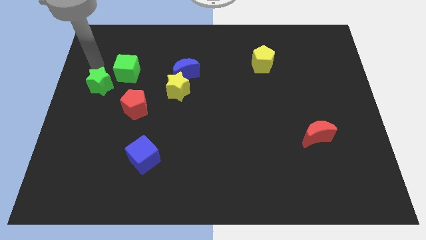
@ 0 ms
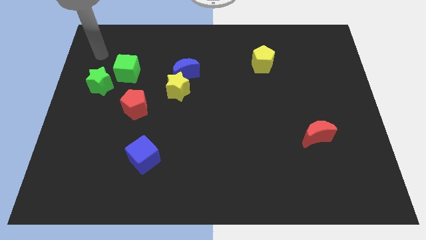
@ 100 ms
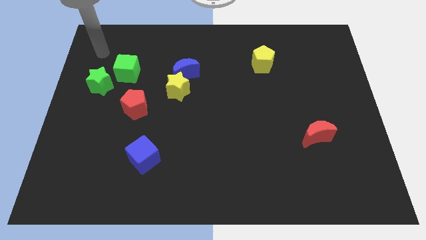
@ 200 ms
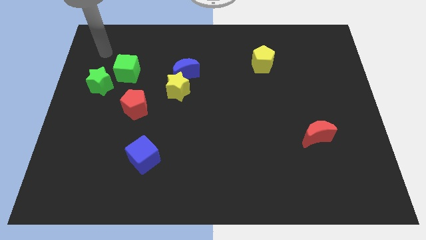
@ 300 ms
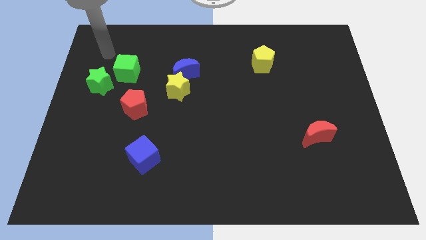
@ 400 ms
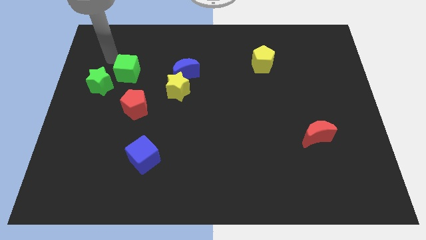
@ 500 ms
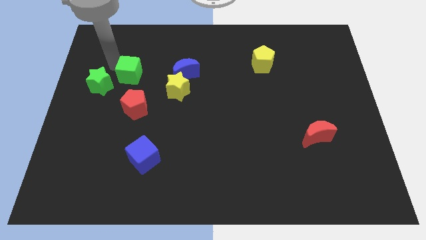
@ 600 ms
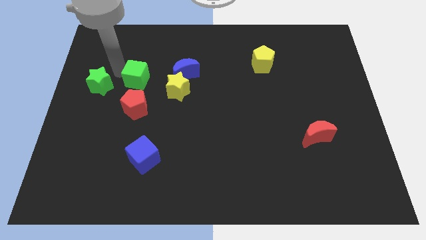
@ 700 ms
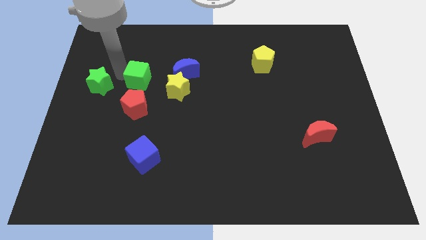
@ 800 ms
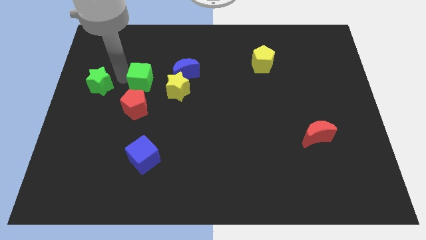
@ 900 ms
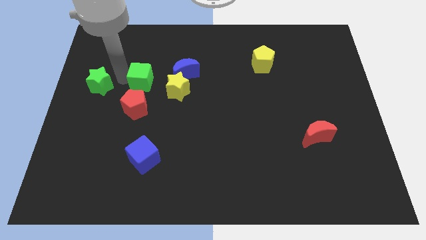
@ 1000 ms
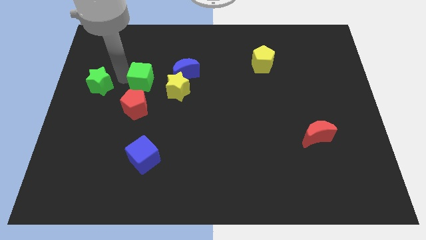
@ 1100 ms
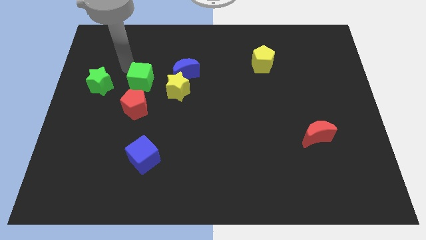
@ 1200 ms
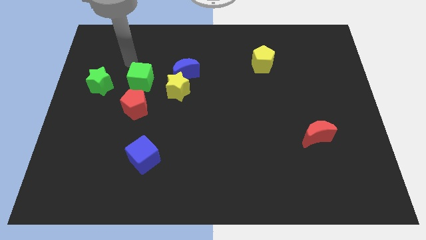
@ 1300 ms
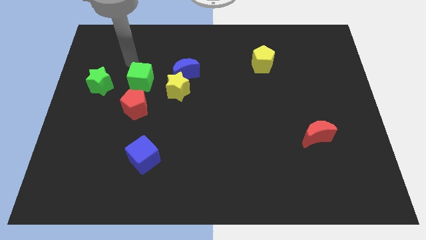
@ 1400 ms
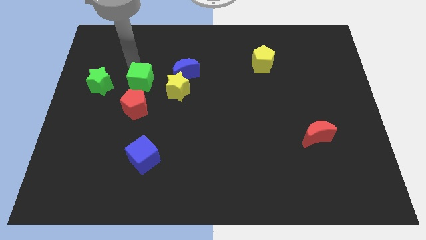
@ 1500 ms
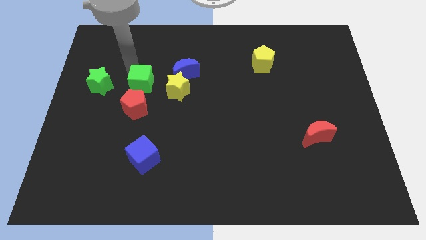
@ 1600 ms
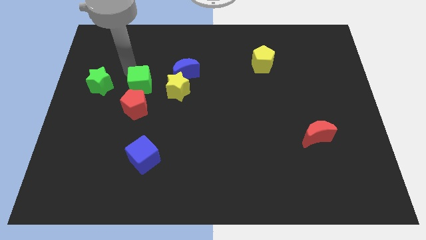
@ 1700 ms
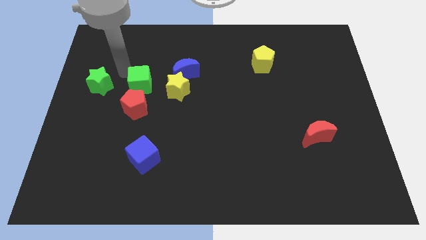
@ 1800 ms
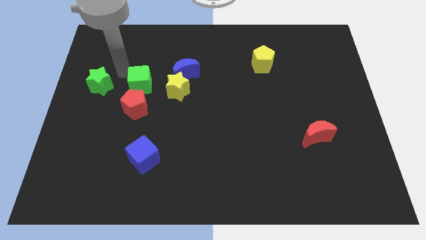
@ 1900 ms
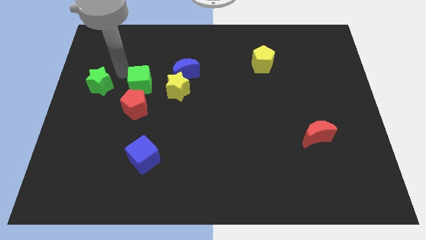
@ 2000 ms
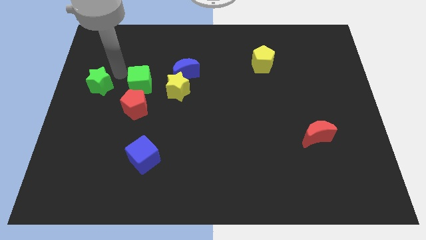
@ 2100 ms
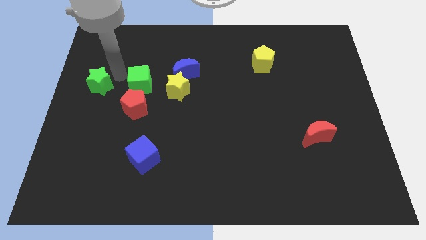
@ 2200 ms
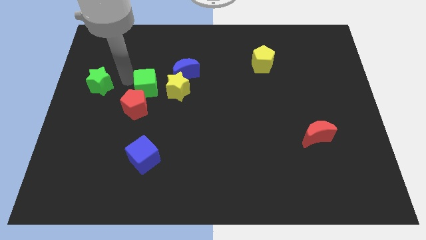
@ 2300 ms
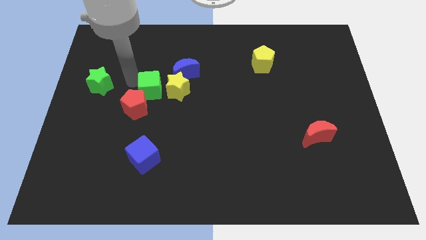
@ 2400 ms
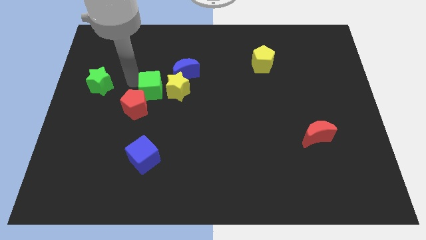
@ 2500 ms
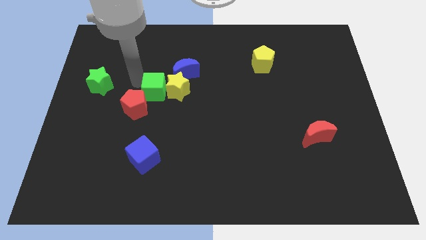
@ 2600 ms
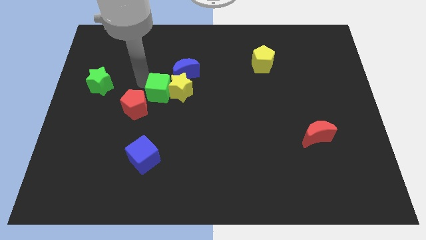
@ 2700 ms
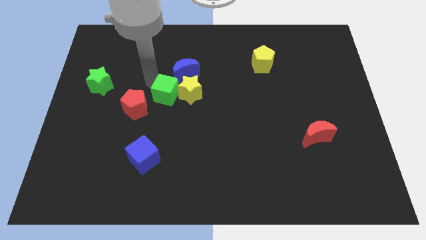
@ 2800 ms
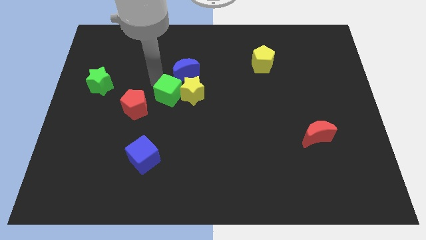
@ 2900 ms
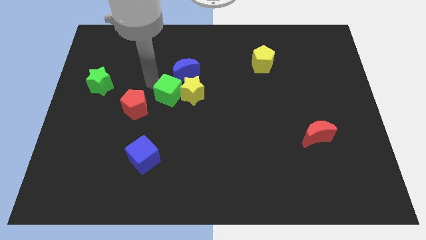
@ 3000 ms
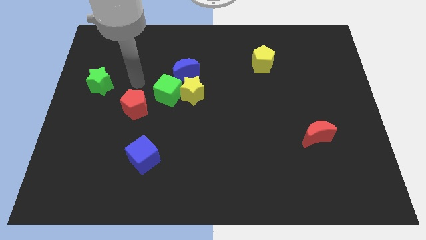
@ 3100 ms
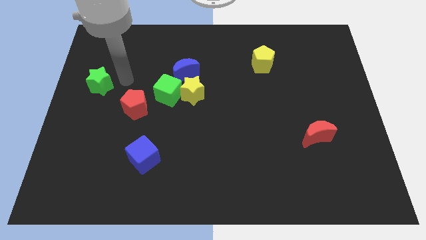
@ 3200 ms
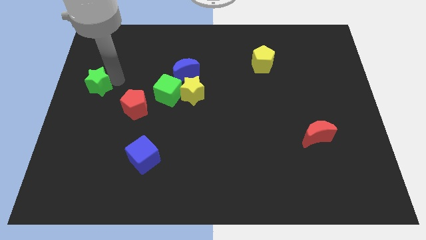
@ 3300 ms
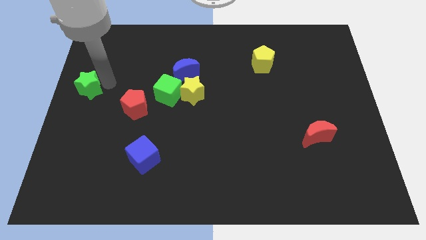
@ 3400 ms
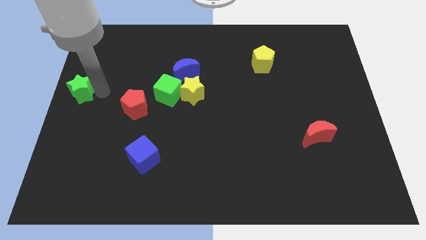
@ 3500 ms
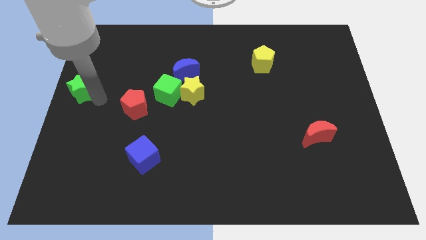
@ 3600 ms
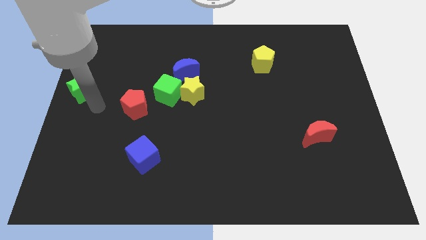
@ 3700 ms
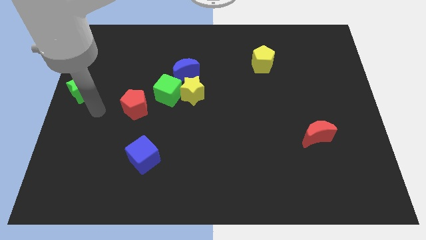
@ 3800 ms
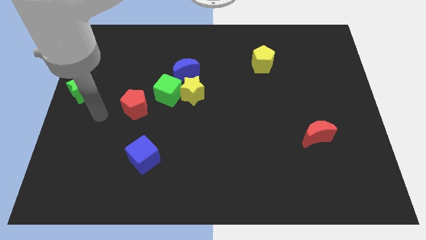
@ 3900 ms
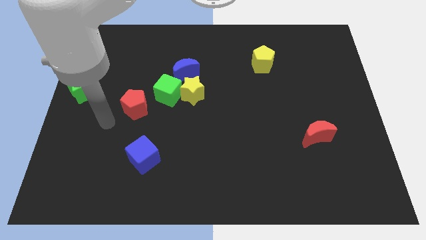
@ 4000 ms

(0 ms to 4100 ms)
move the green cube to the left of the yellow star

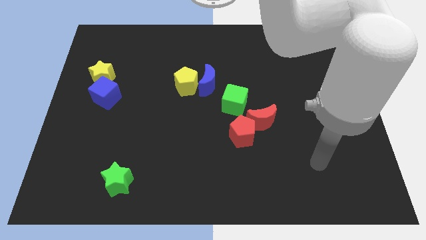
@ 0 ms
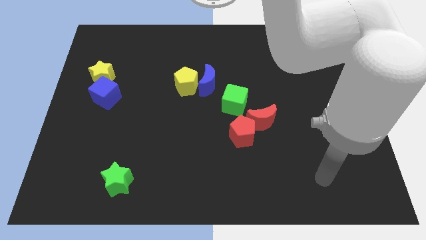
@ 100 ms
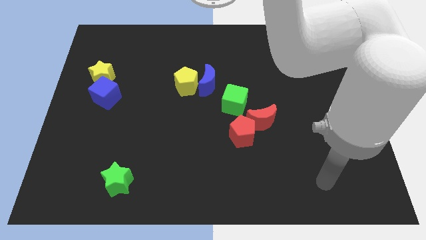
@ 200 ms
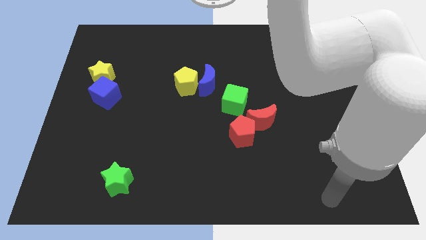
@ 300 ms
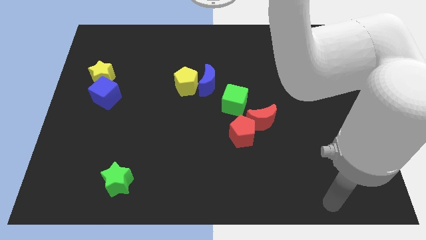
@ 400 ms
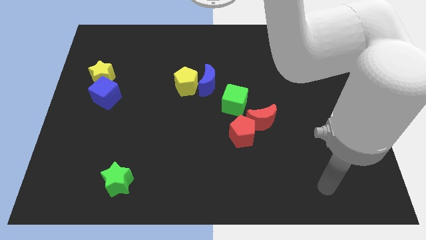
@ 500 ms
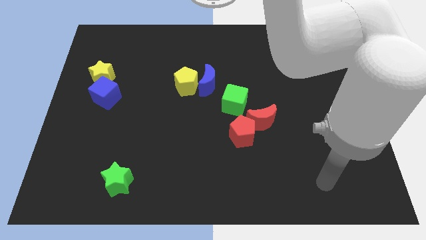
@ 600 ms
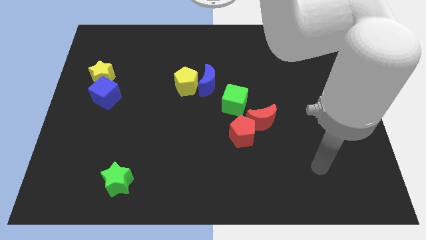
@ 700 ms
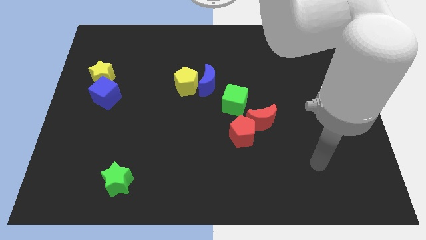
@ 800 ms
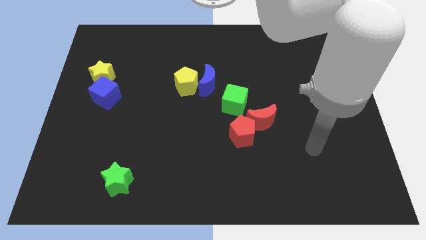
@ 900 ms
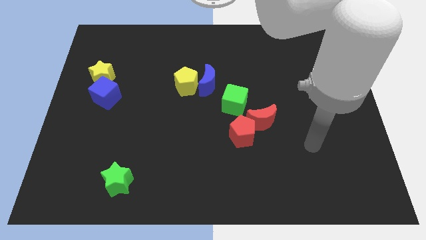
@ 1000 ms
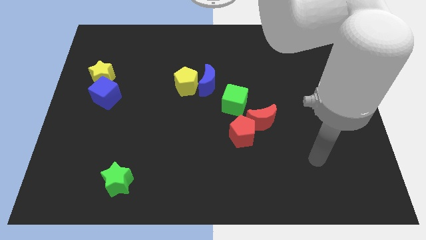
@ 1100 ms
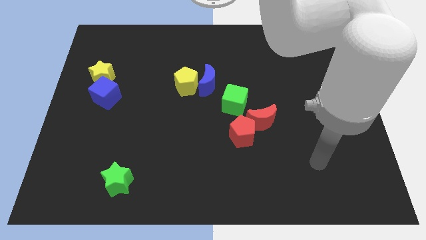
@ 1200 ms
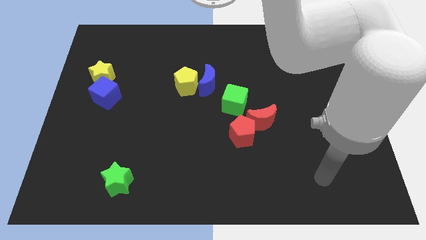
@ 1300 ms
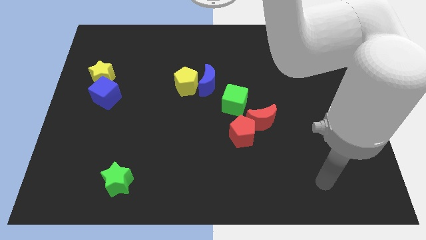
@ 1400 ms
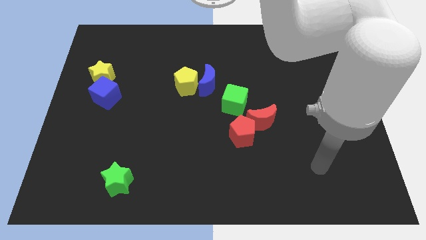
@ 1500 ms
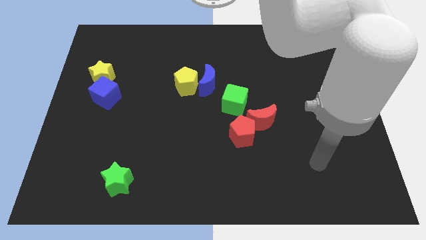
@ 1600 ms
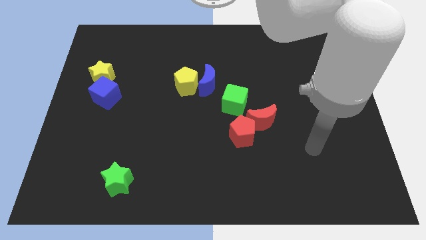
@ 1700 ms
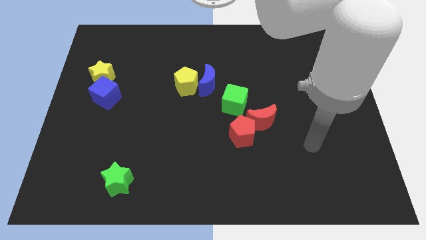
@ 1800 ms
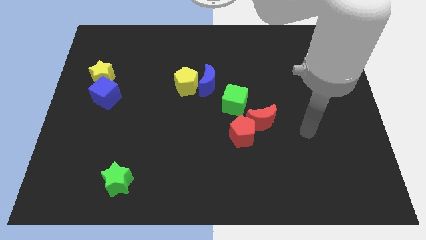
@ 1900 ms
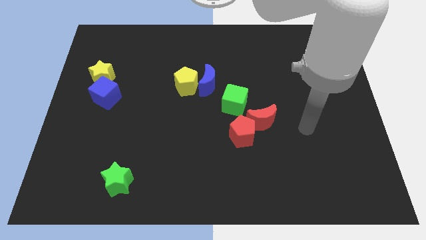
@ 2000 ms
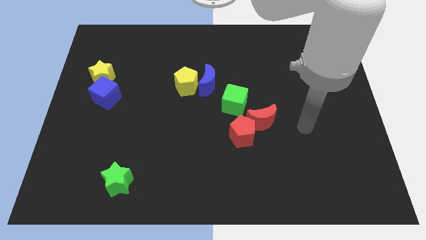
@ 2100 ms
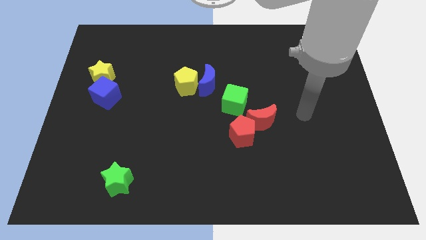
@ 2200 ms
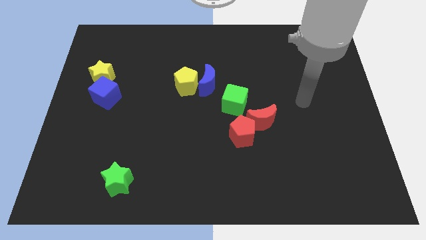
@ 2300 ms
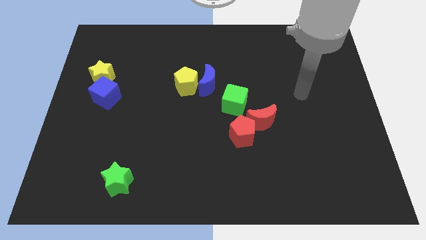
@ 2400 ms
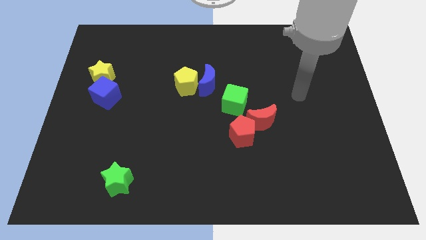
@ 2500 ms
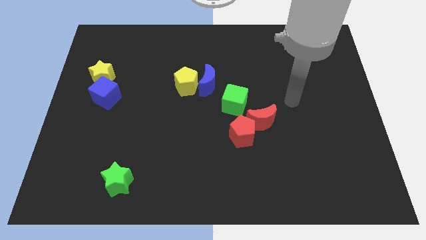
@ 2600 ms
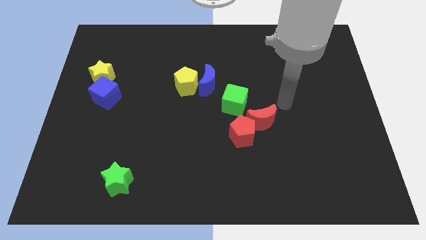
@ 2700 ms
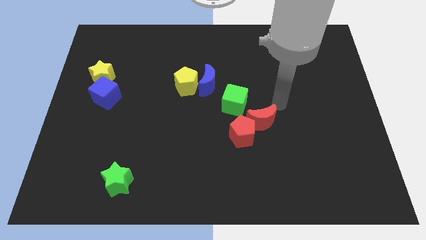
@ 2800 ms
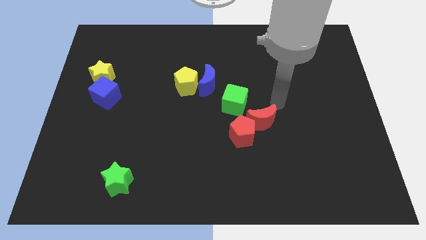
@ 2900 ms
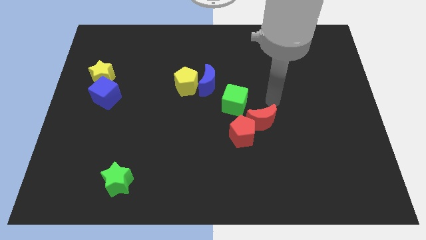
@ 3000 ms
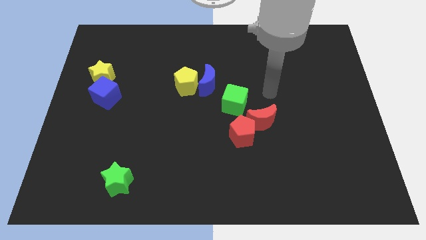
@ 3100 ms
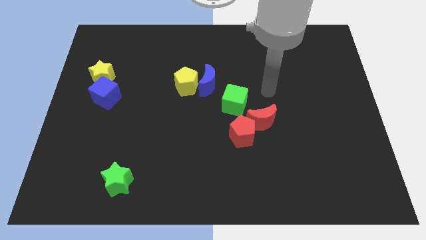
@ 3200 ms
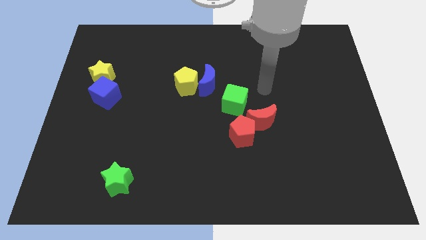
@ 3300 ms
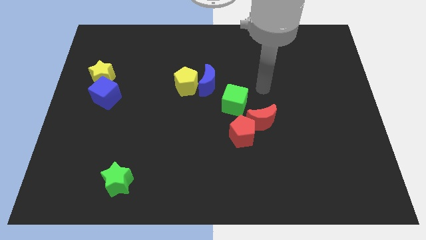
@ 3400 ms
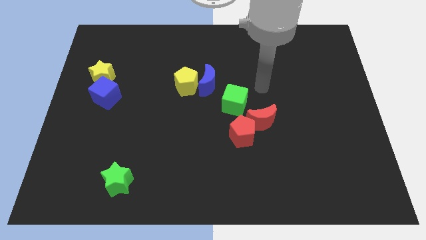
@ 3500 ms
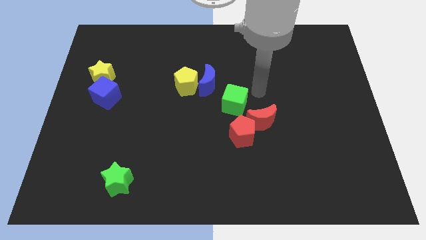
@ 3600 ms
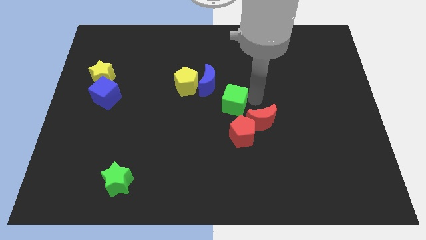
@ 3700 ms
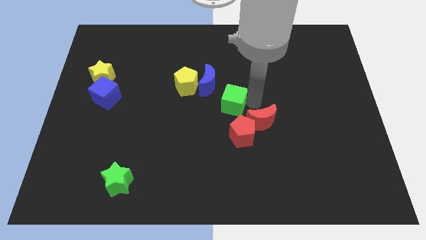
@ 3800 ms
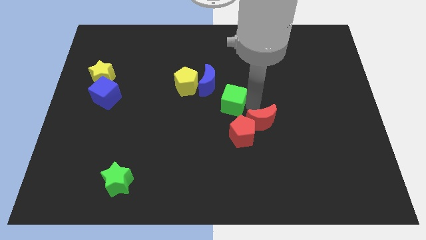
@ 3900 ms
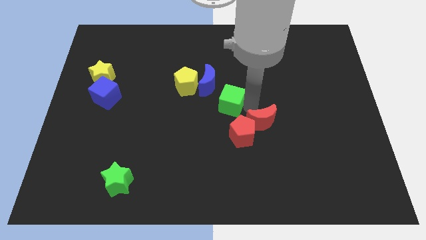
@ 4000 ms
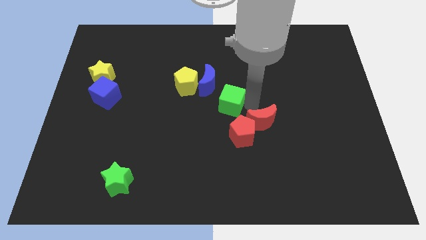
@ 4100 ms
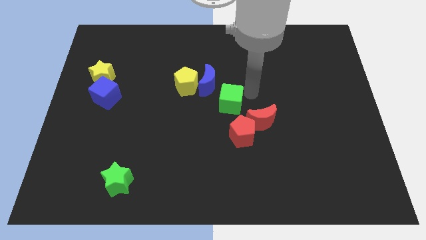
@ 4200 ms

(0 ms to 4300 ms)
slightly push the green cube to the left of the board

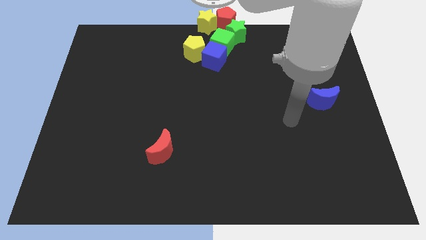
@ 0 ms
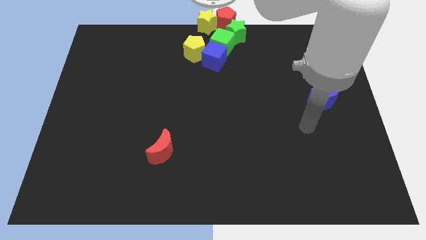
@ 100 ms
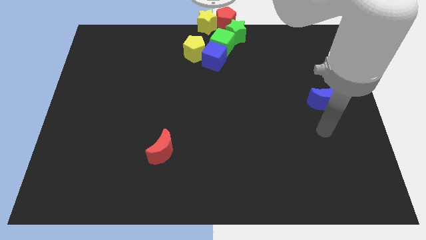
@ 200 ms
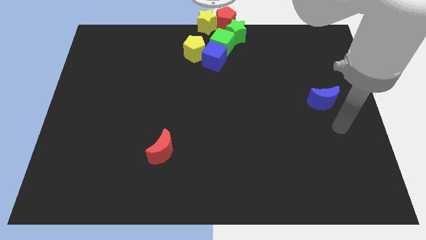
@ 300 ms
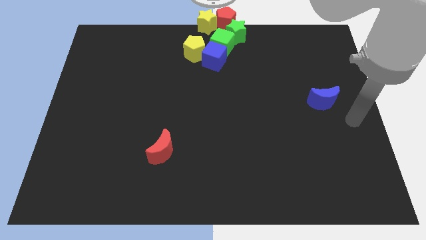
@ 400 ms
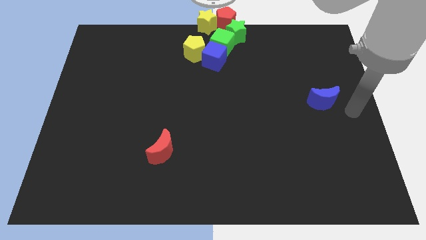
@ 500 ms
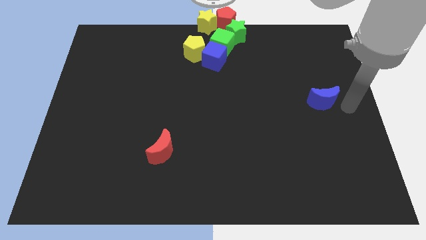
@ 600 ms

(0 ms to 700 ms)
move your arm right to the blue crescent
